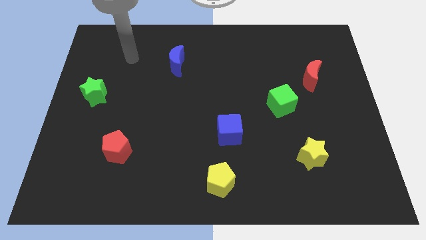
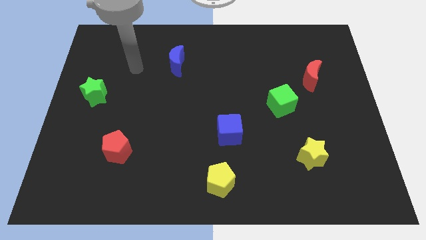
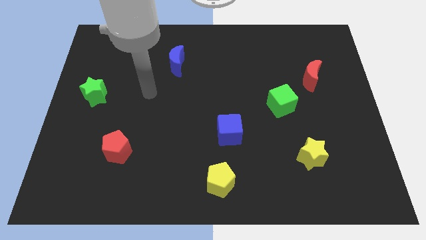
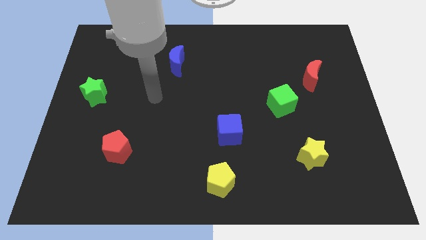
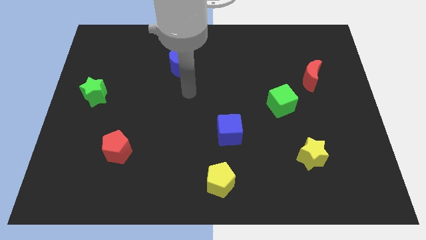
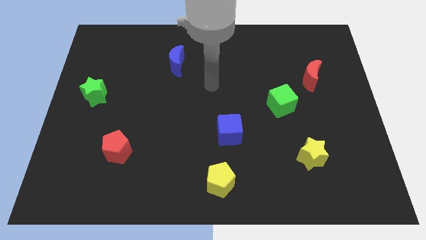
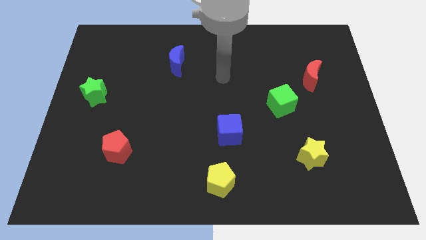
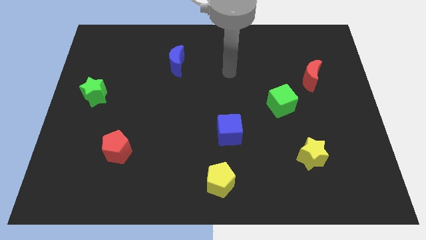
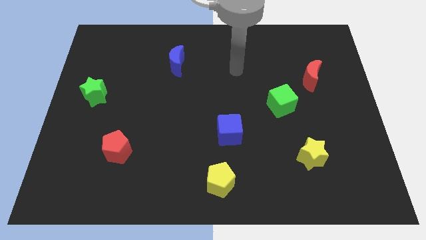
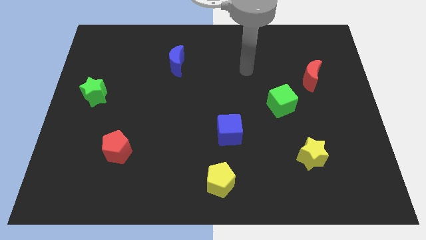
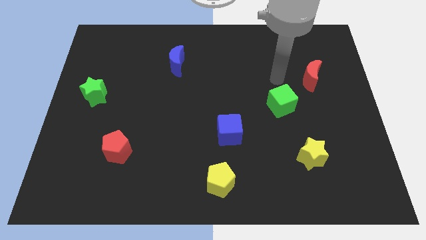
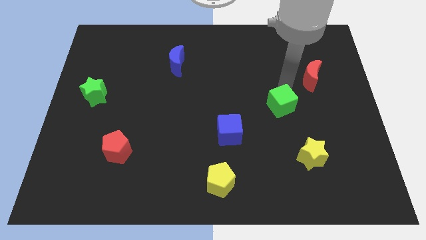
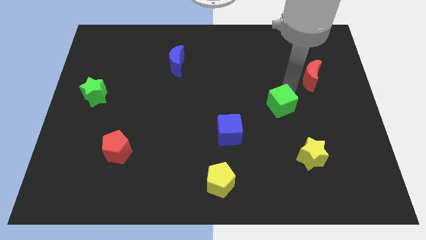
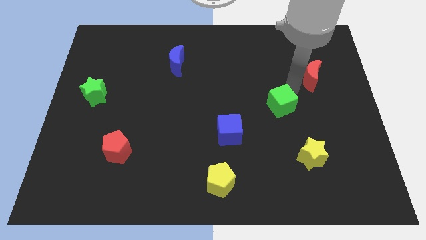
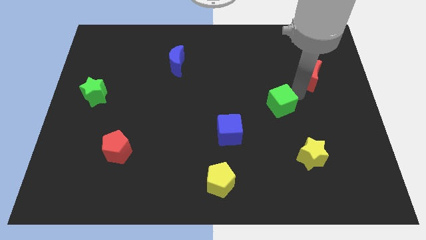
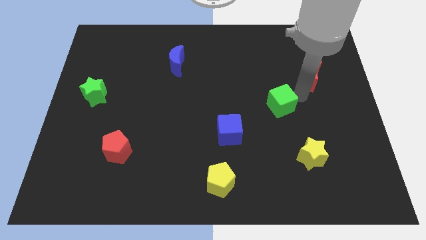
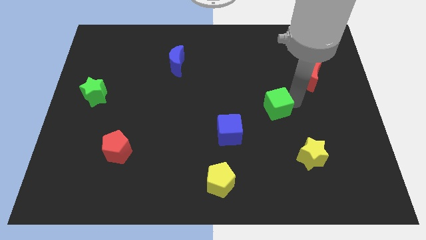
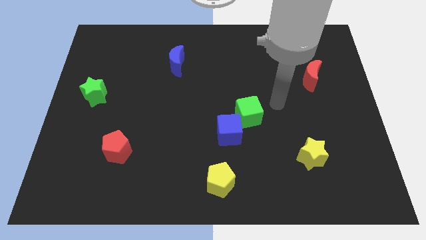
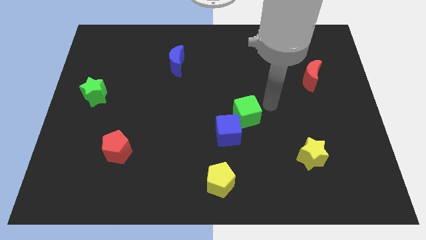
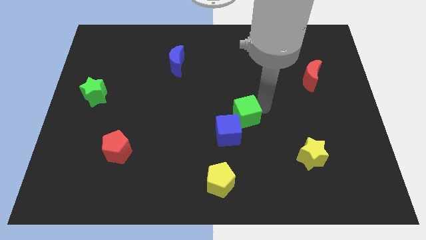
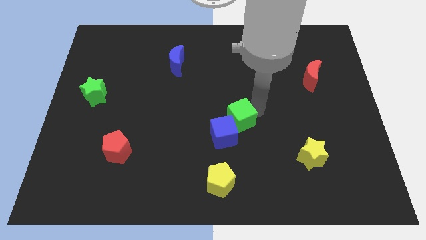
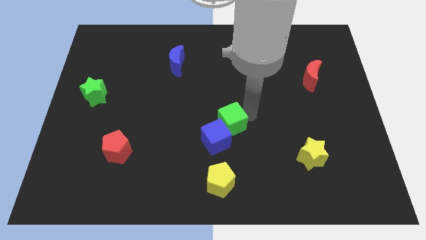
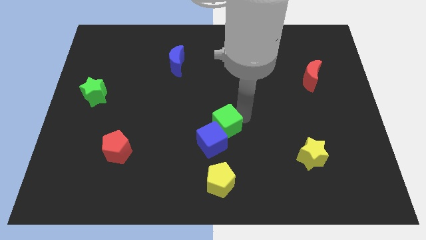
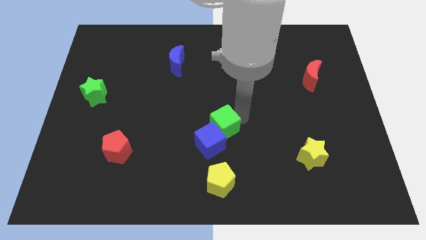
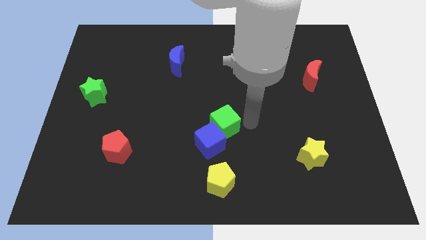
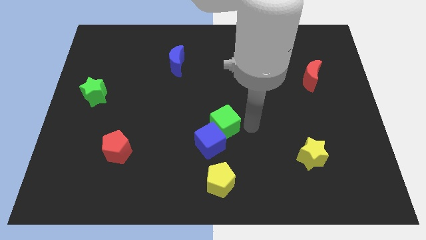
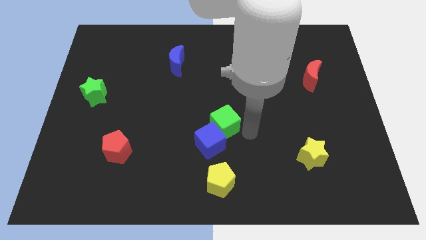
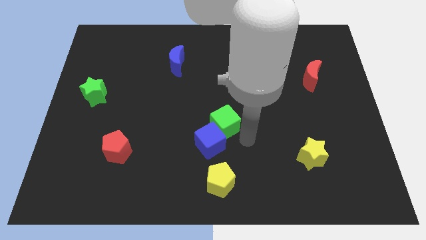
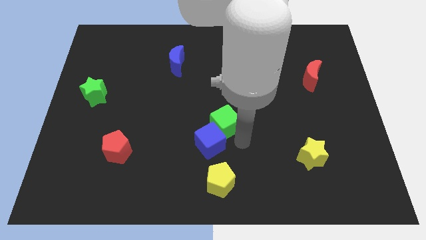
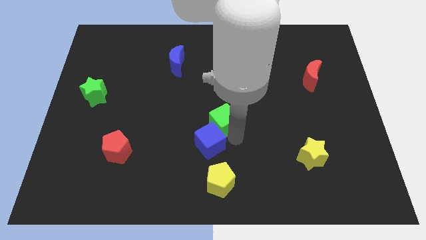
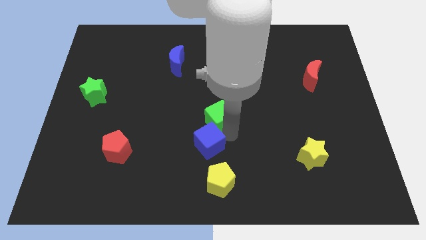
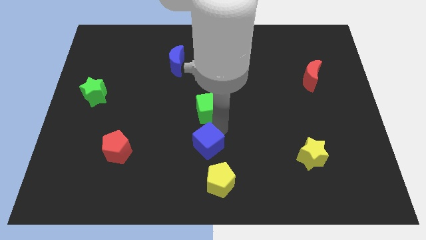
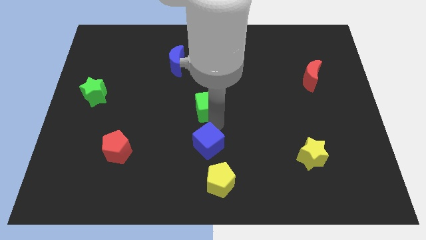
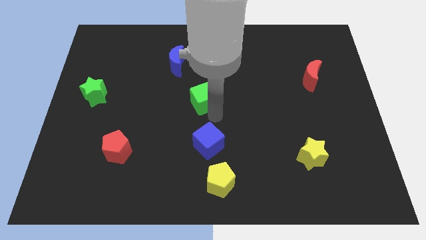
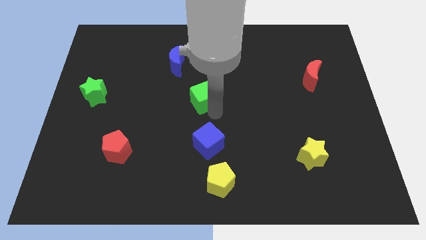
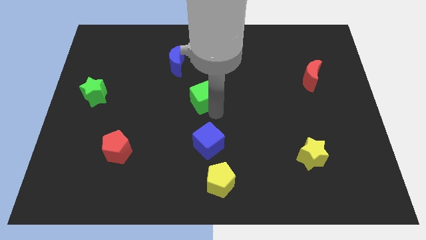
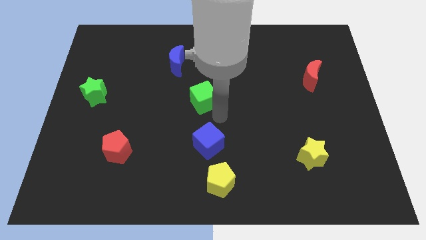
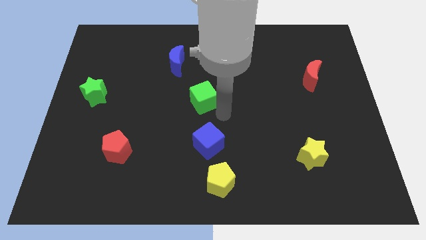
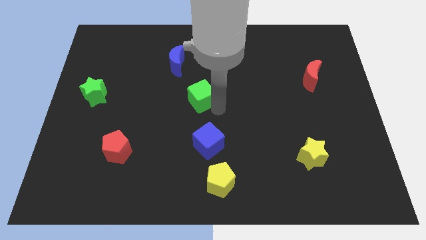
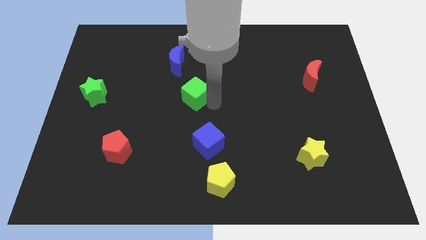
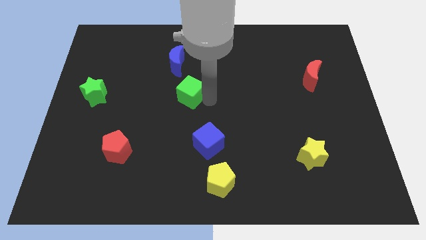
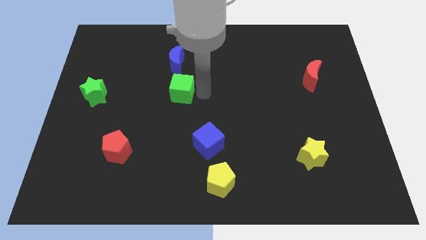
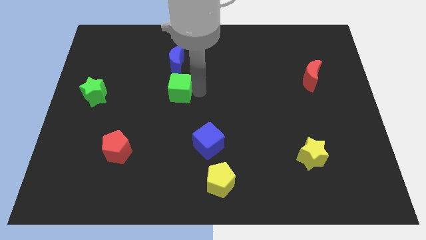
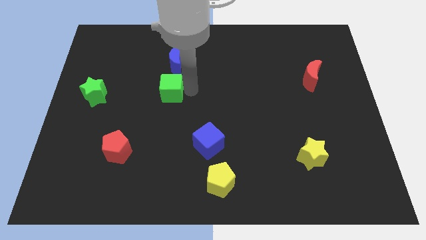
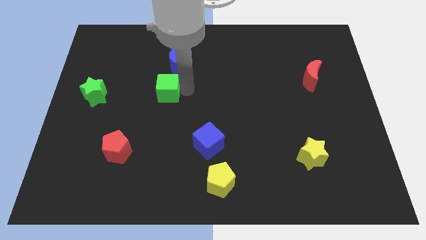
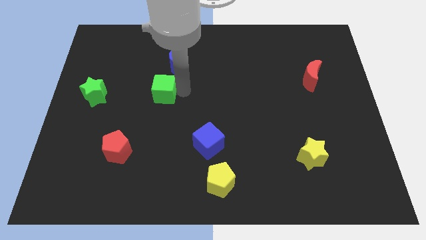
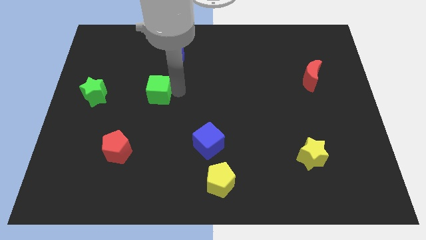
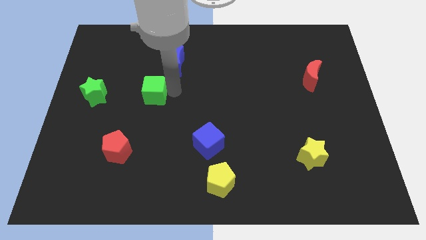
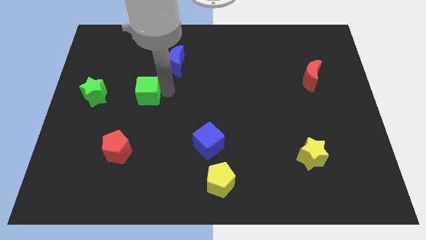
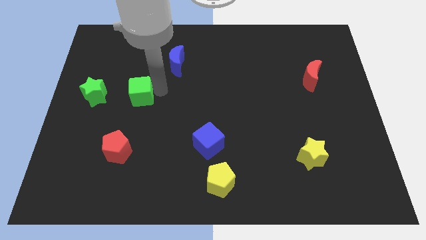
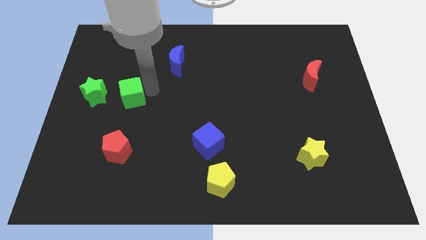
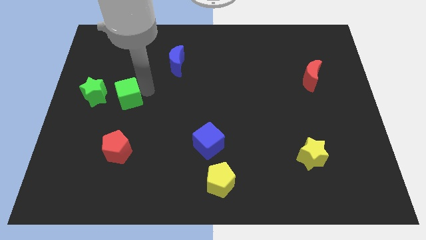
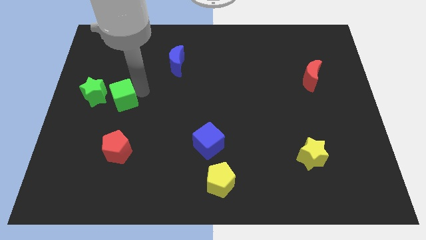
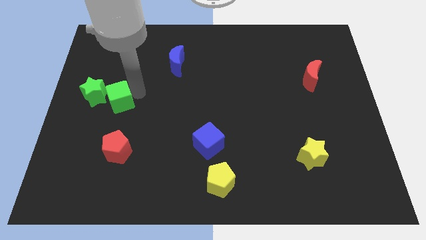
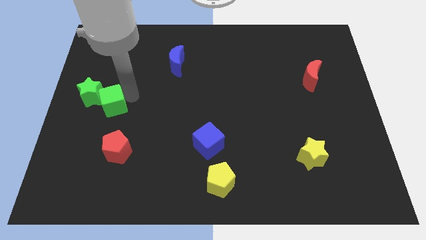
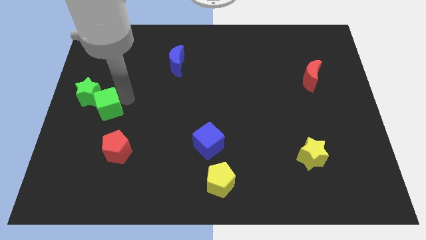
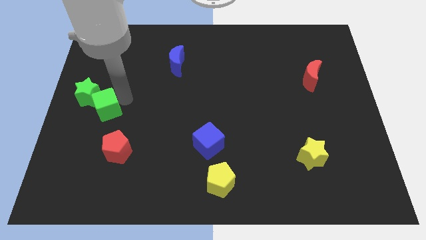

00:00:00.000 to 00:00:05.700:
move the green cube towards the green star

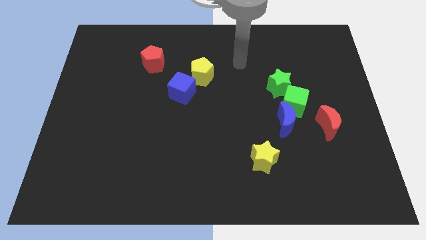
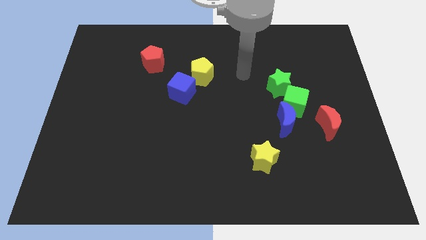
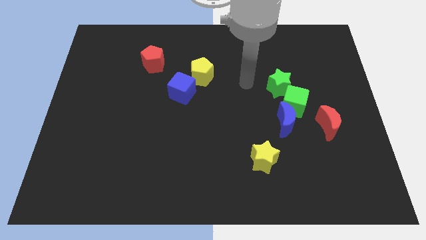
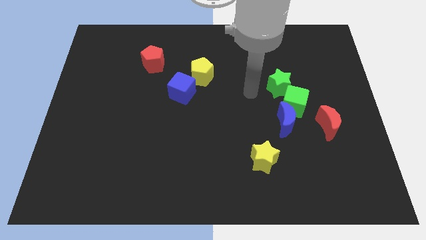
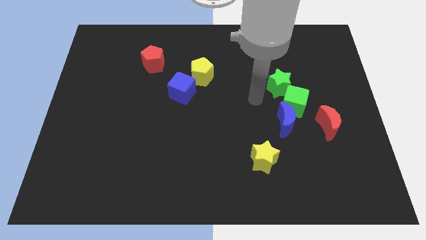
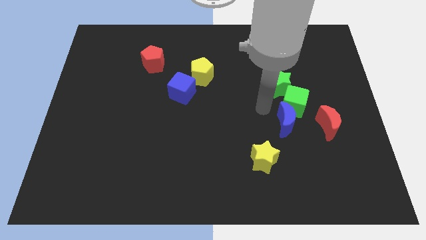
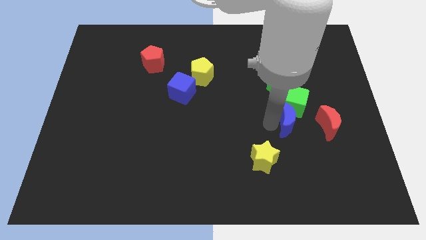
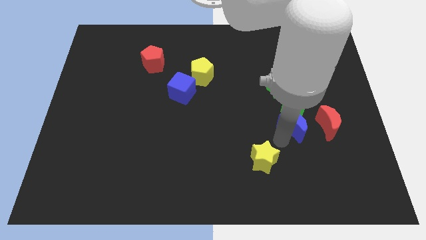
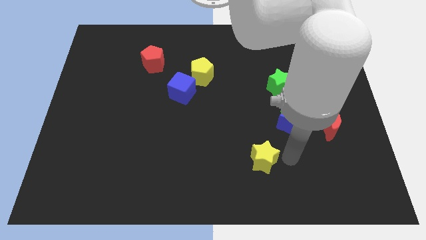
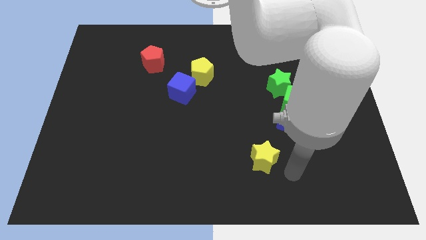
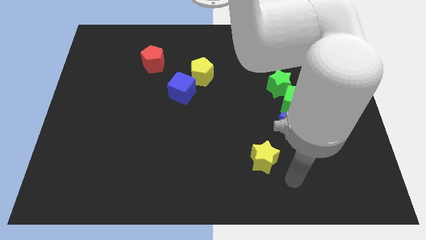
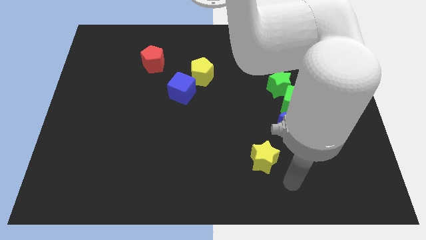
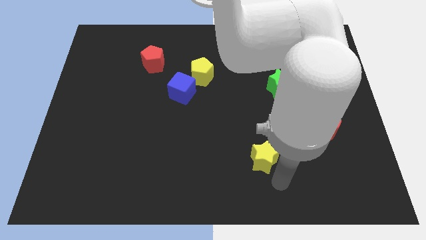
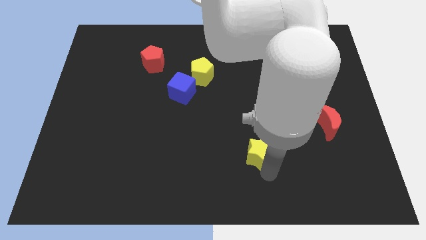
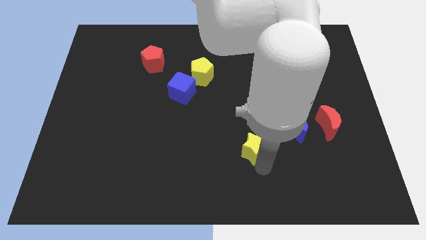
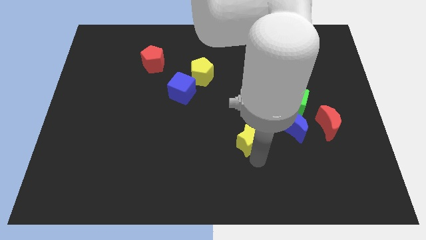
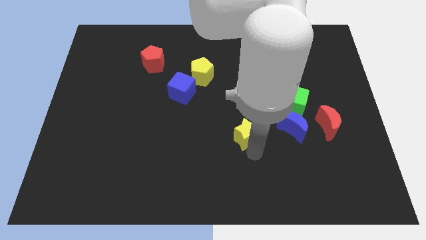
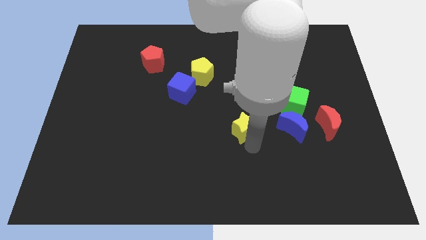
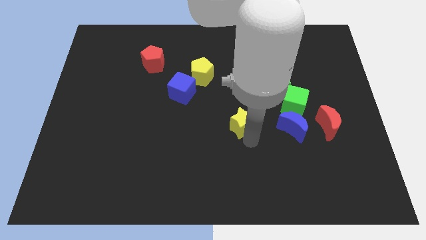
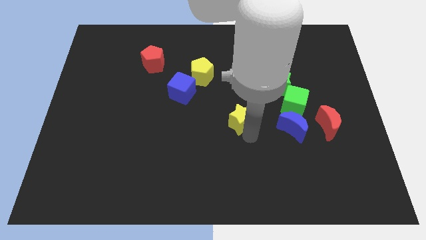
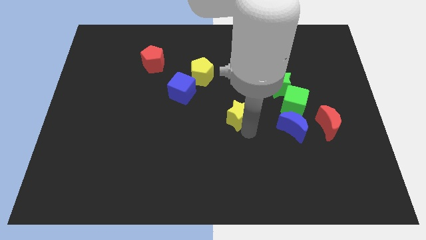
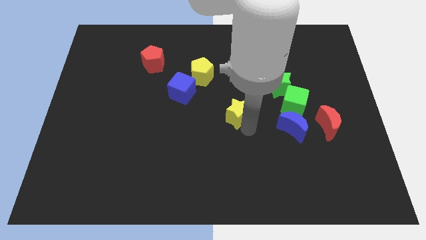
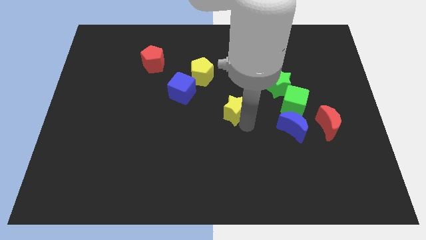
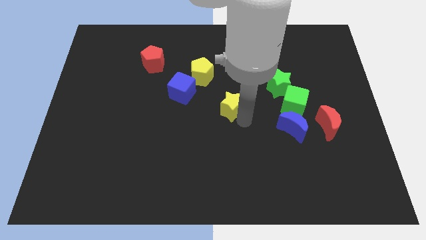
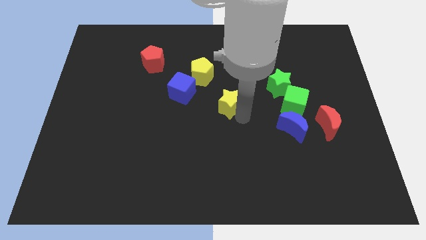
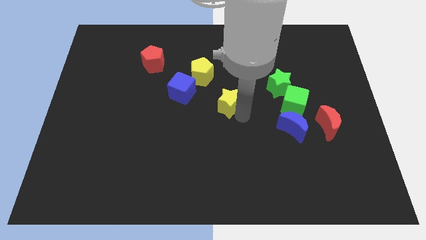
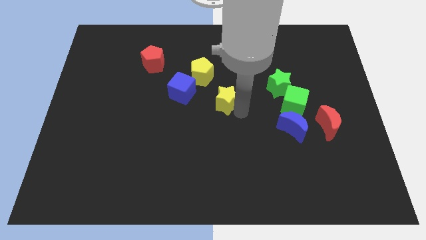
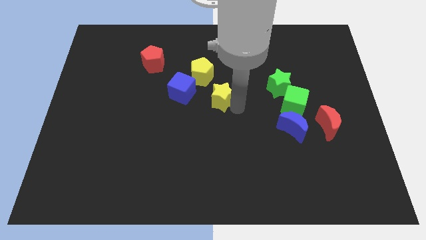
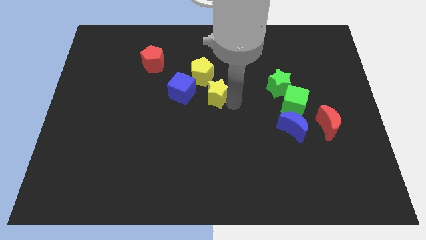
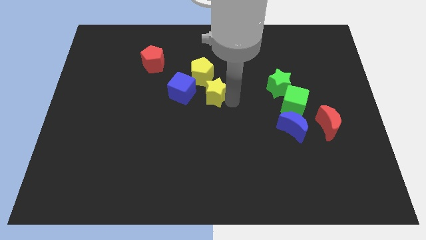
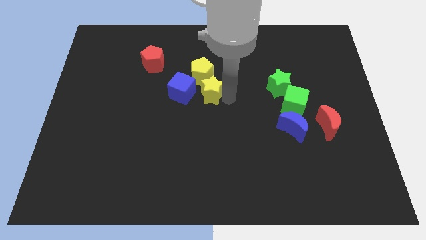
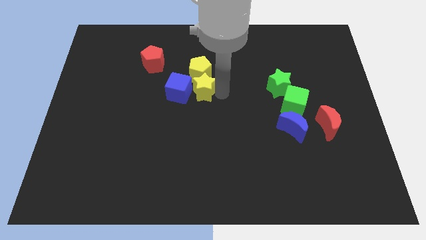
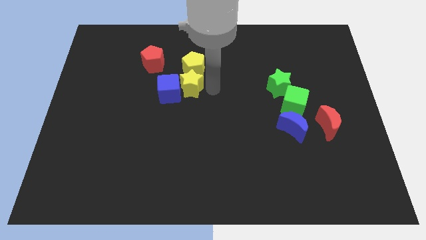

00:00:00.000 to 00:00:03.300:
slide the yellow star close to the yellow pentagon
